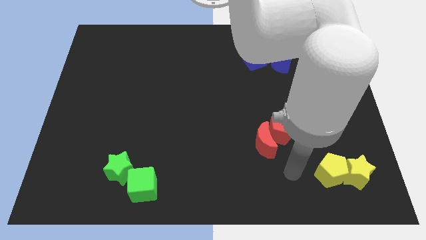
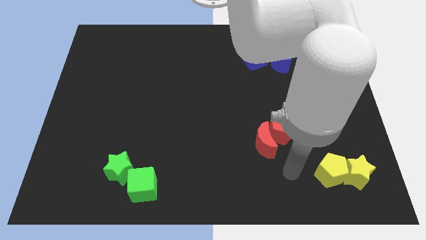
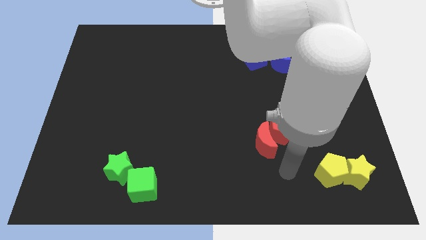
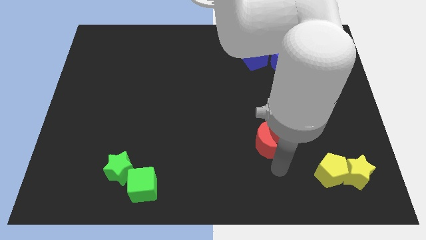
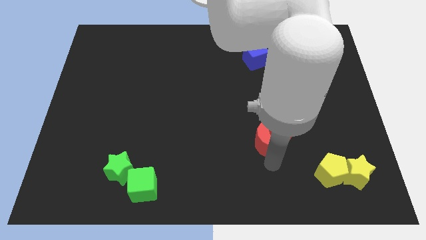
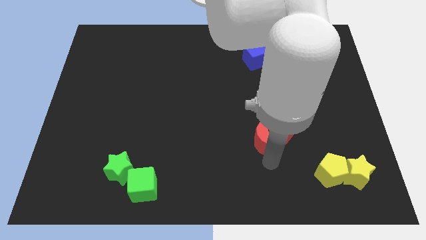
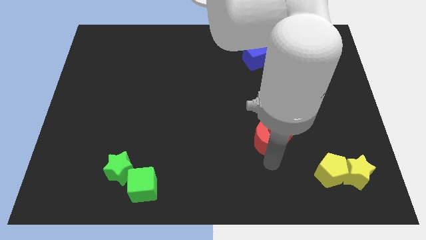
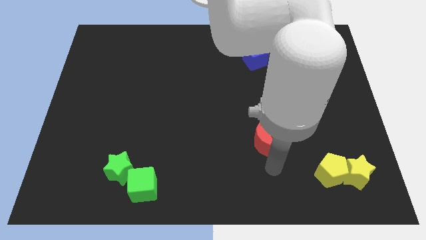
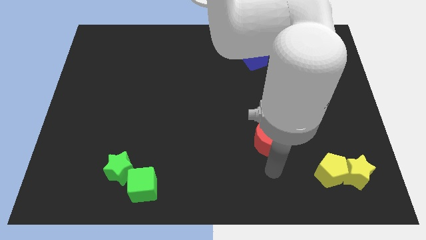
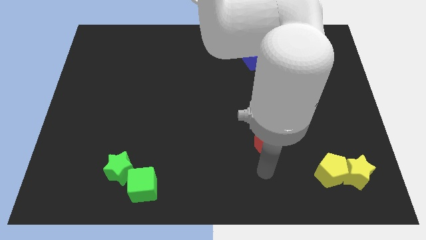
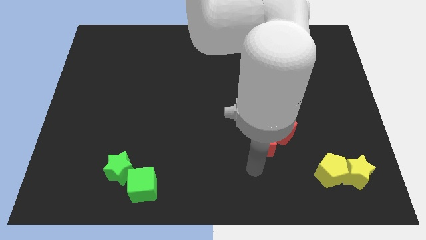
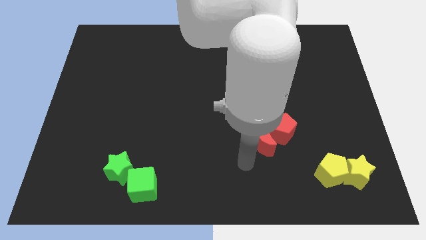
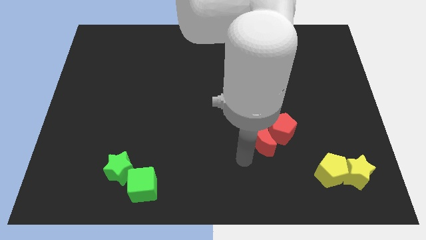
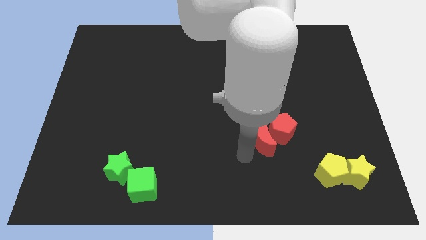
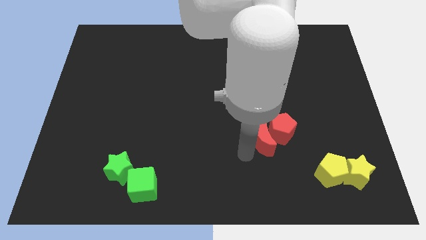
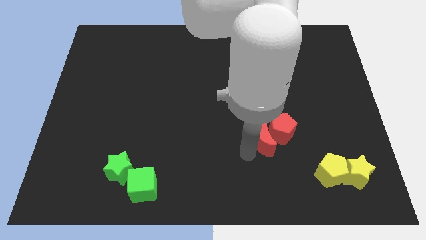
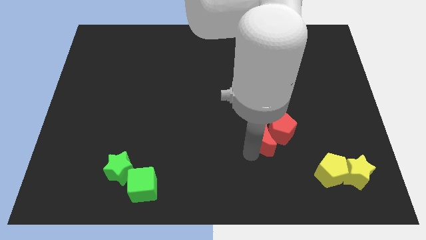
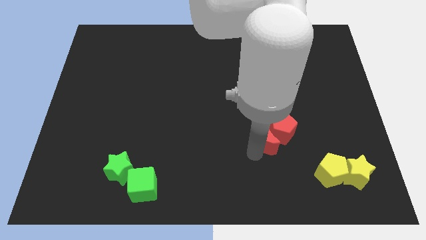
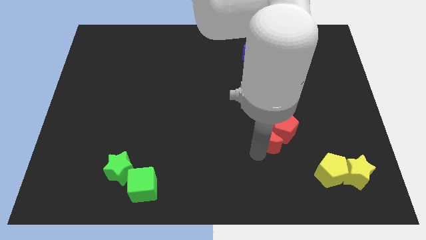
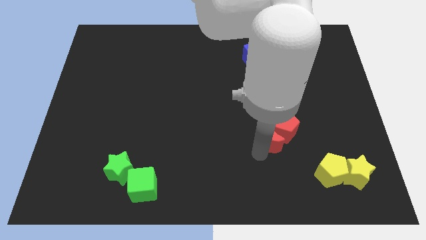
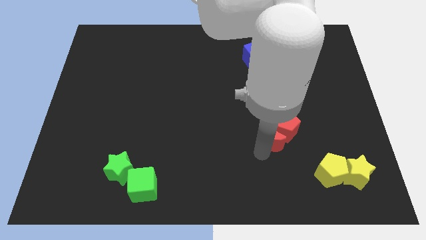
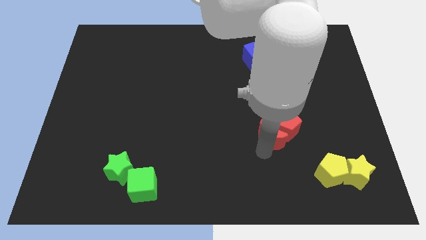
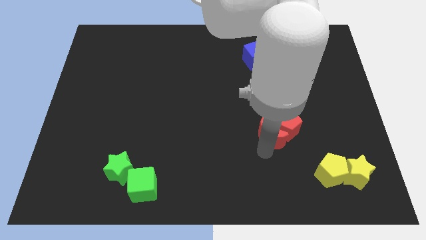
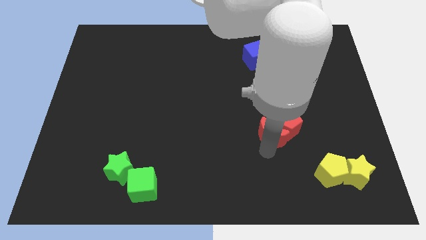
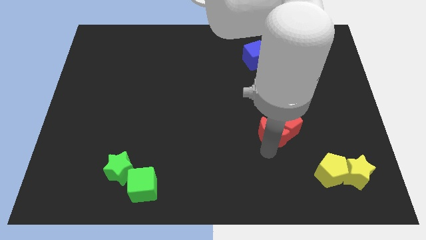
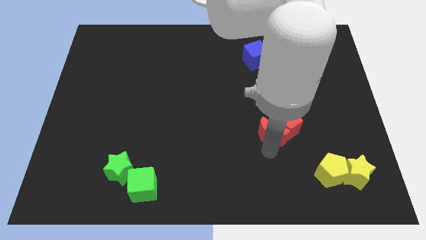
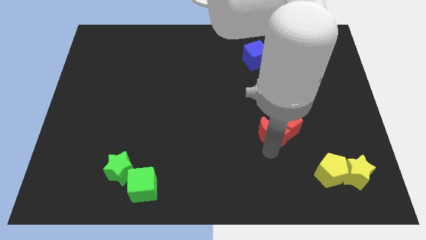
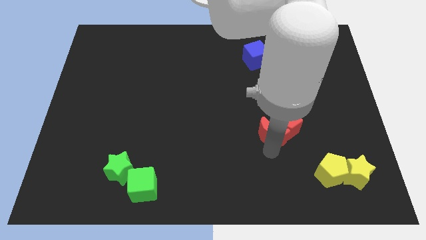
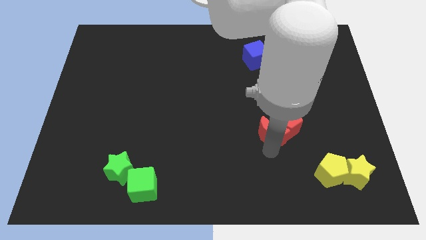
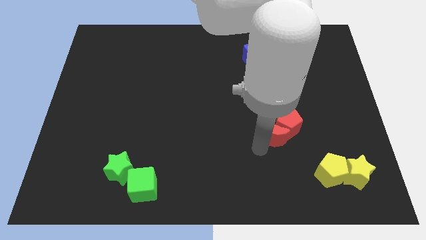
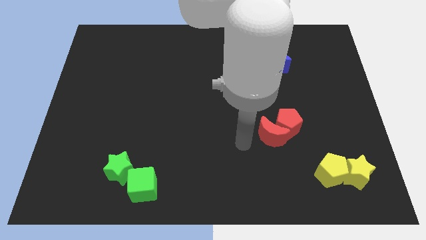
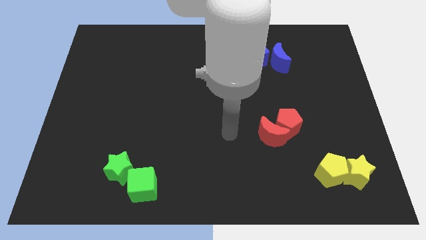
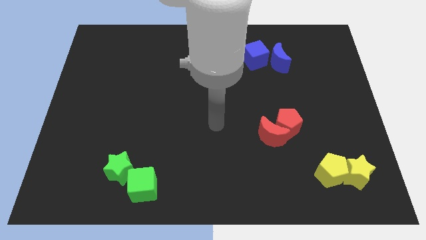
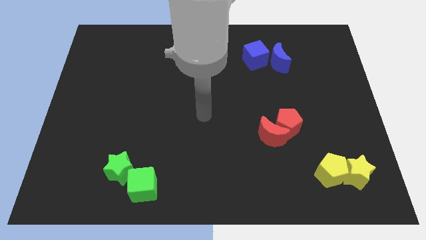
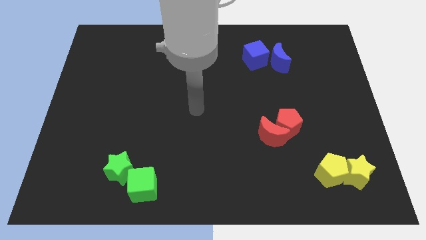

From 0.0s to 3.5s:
push red moon slightly towards its top

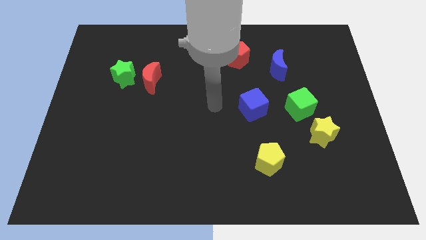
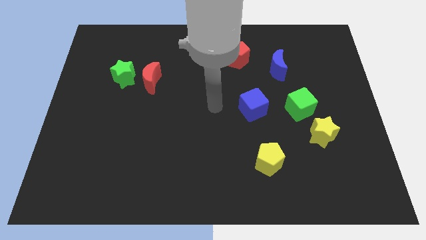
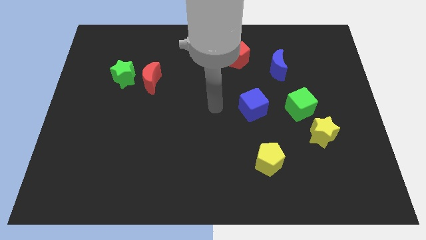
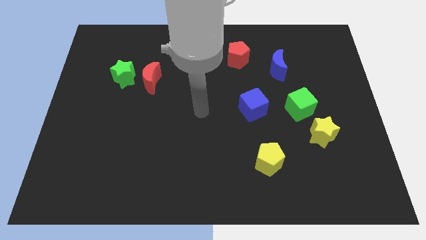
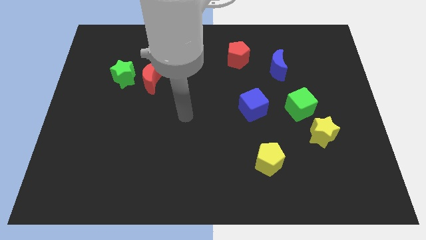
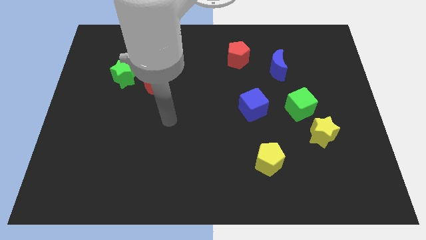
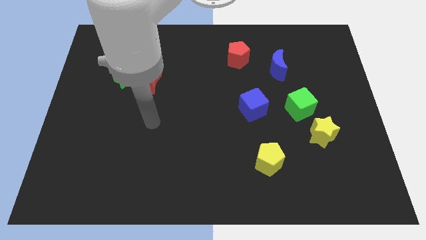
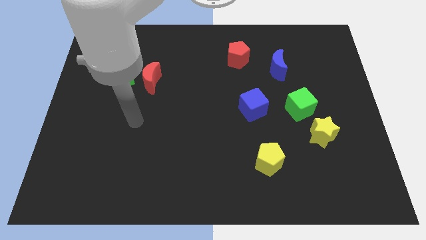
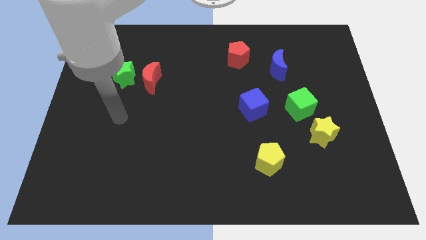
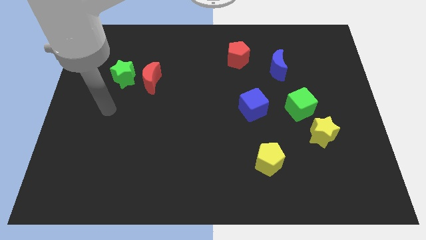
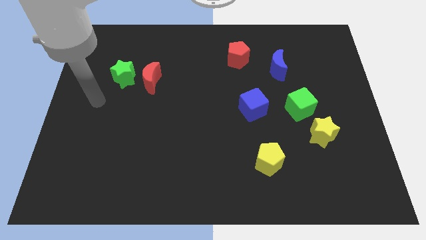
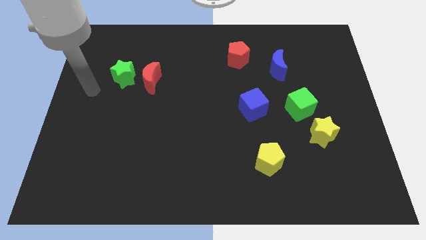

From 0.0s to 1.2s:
move your arm to the center left

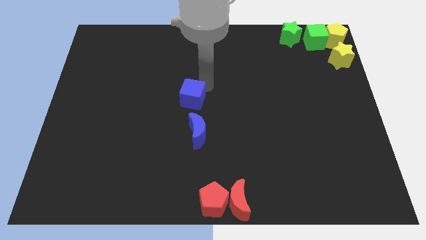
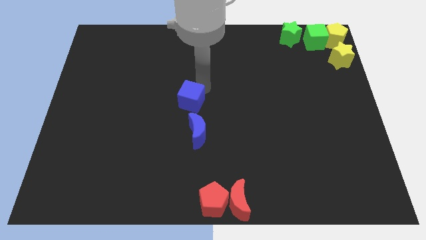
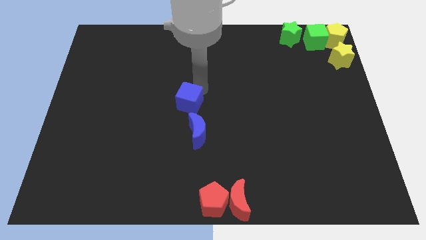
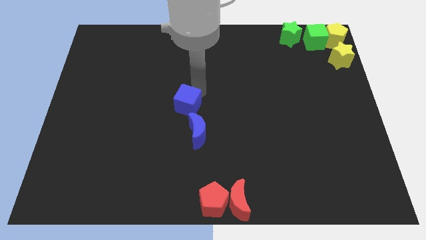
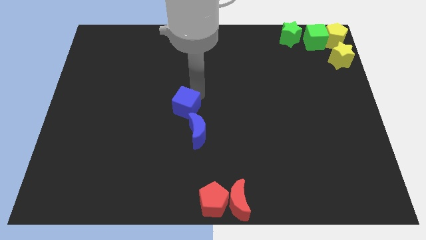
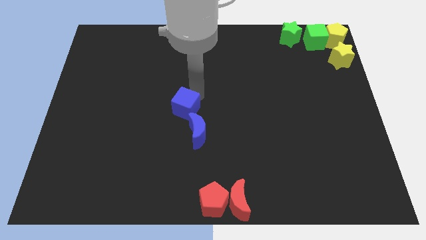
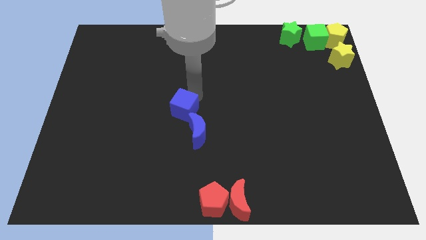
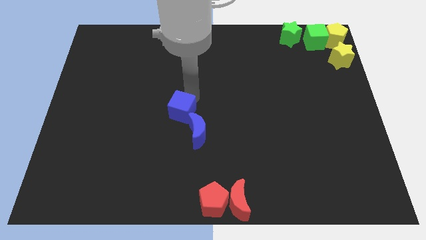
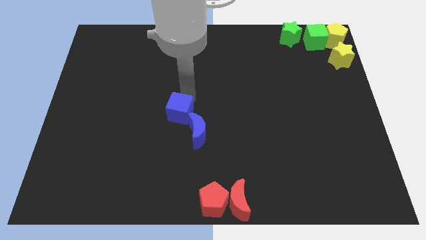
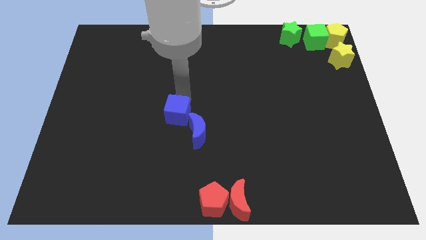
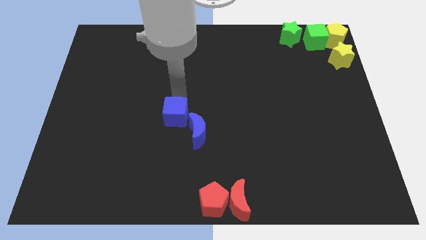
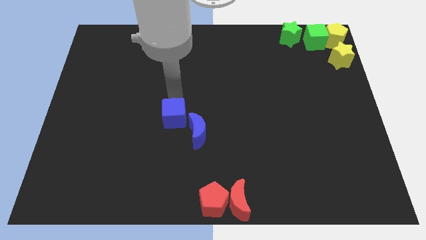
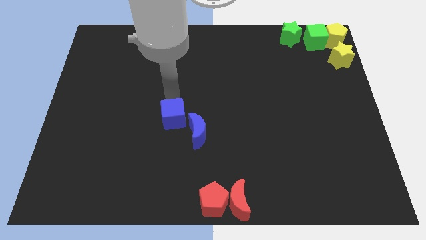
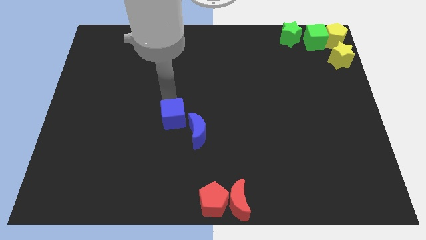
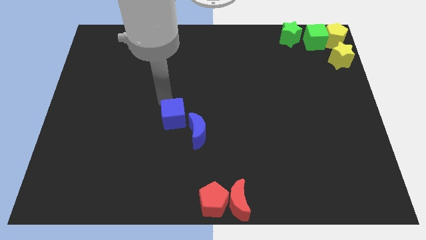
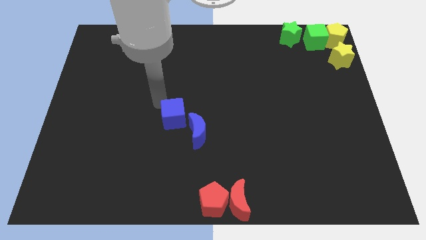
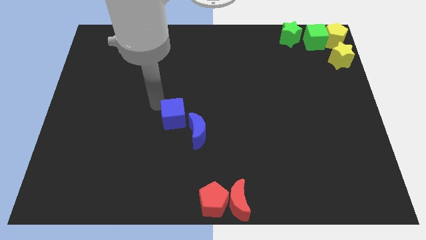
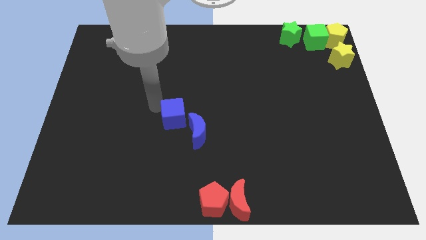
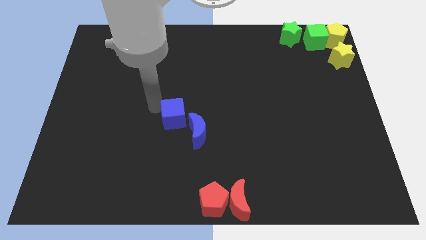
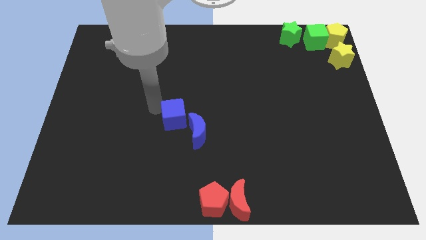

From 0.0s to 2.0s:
push the blue cube to the left of the blue crescent

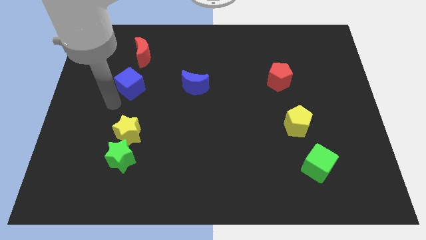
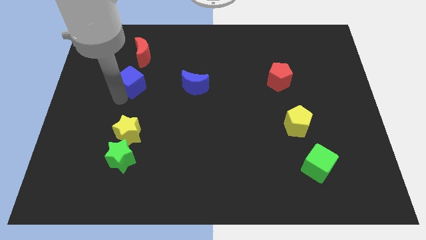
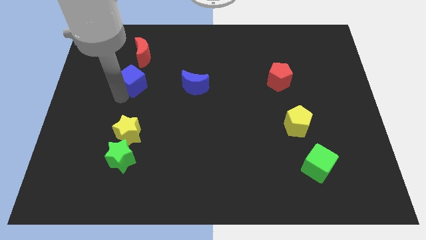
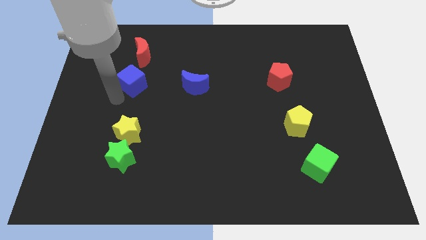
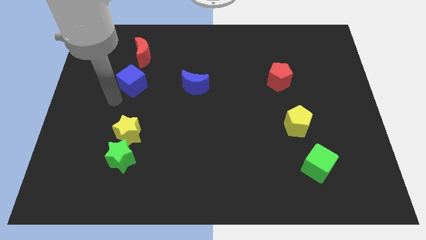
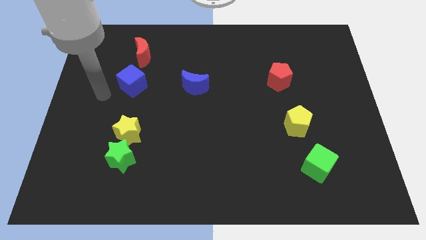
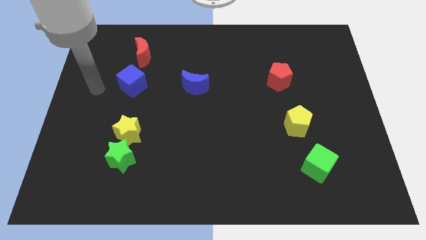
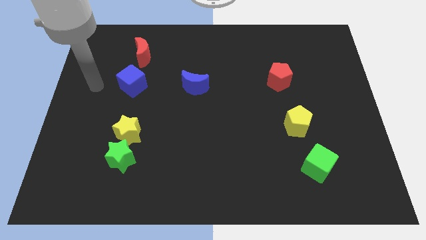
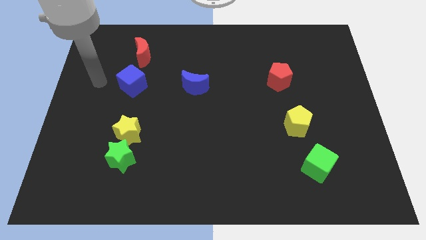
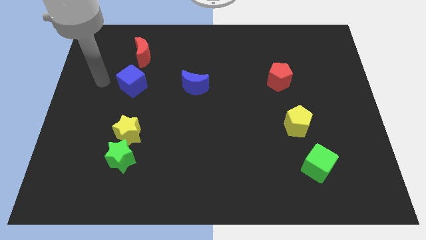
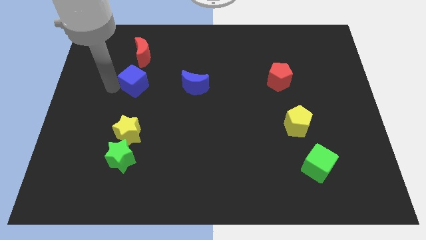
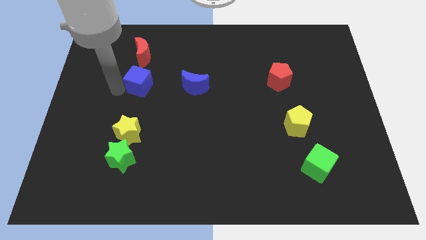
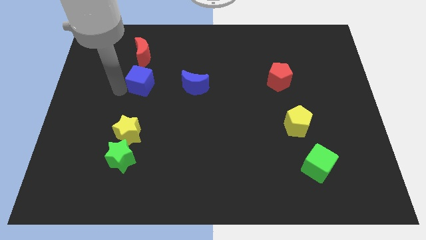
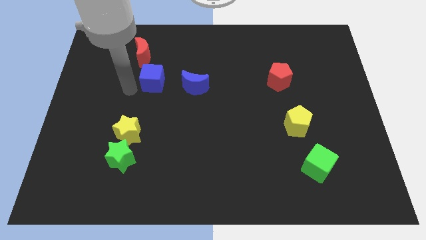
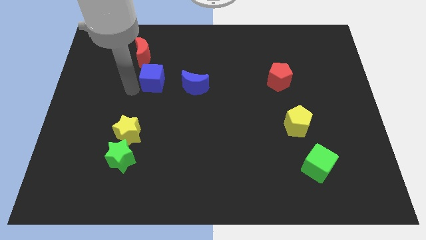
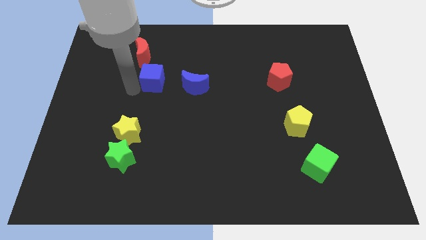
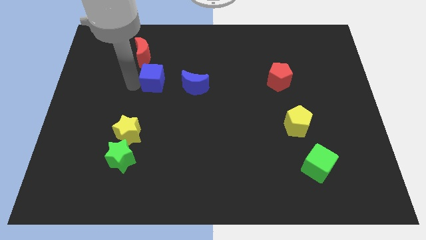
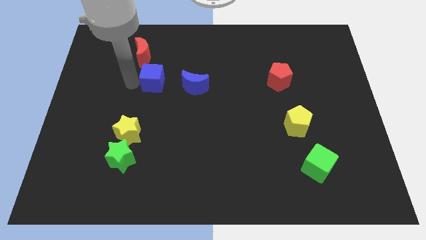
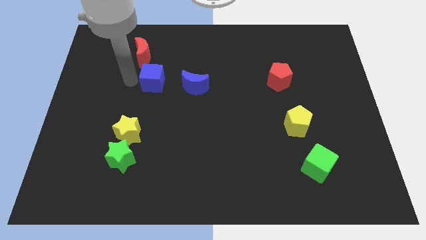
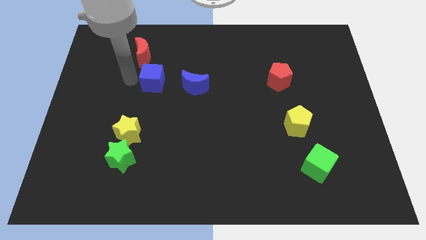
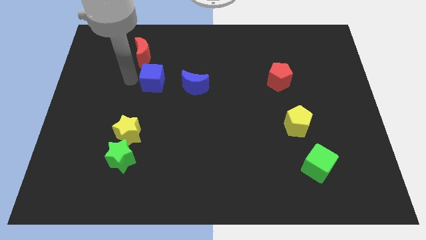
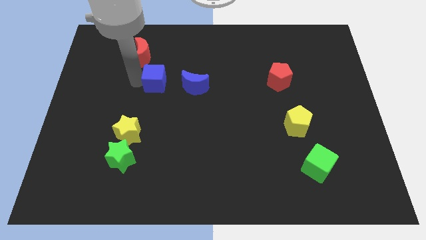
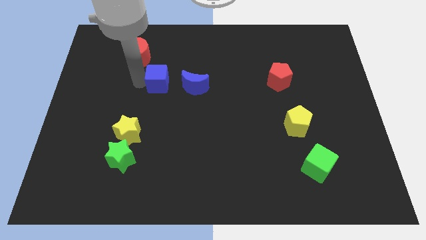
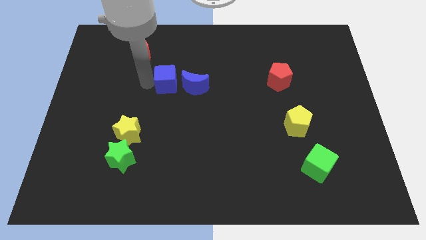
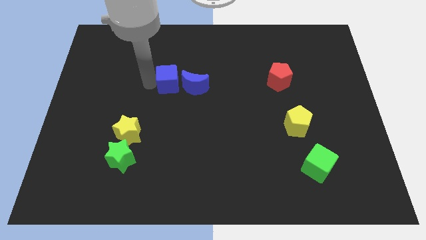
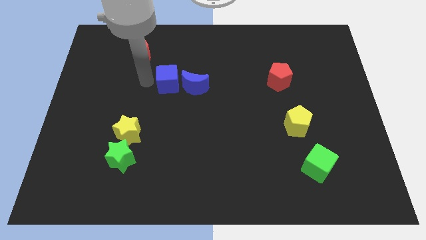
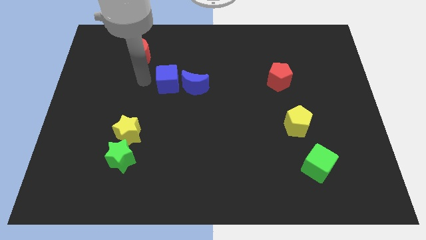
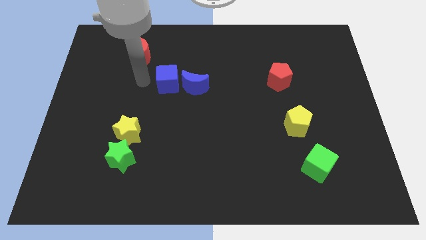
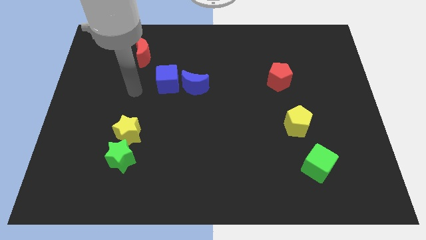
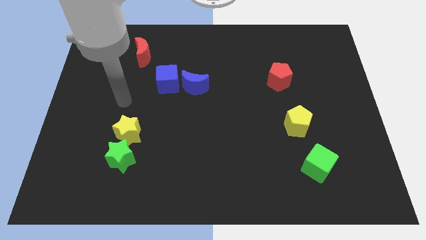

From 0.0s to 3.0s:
place the blue cube left of the blue moon
